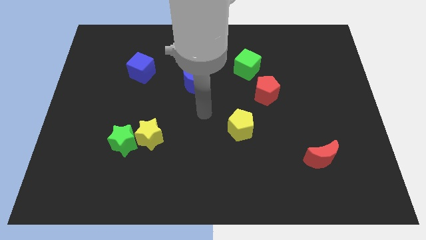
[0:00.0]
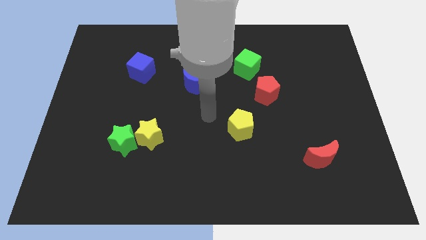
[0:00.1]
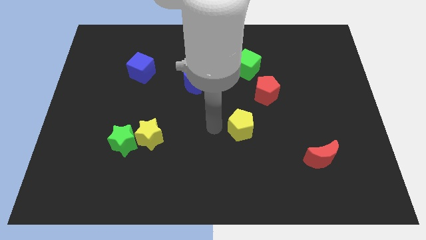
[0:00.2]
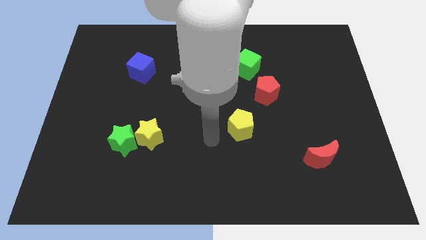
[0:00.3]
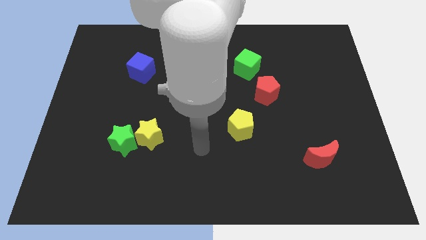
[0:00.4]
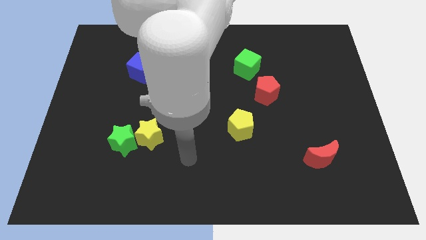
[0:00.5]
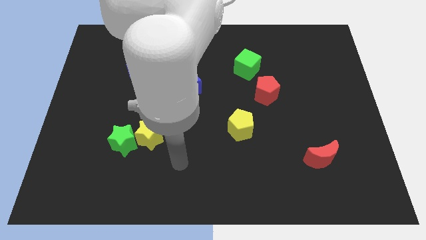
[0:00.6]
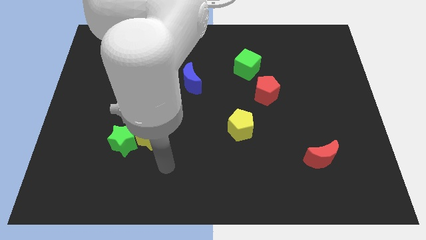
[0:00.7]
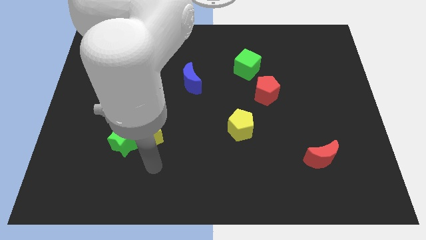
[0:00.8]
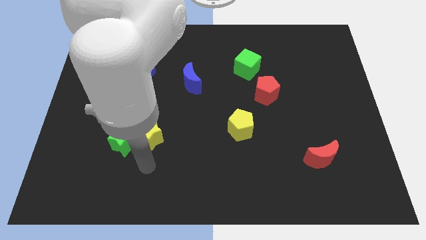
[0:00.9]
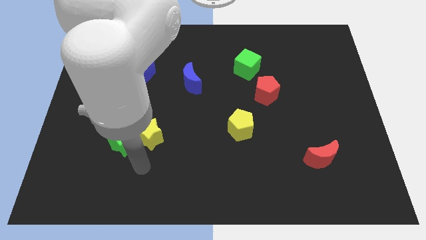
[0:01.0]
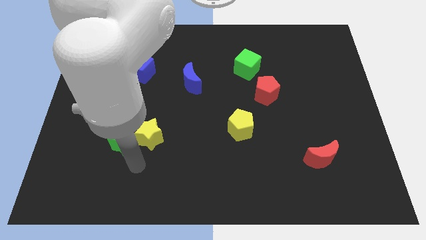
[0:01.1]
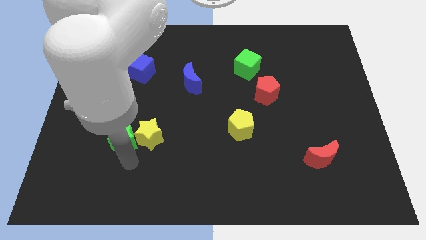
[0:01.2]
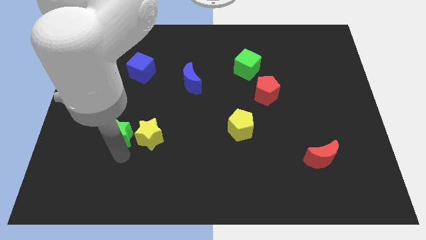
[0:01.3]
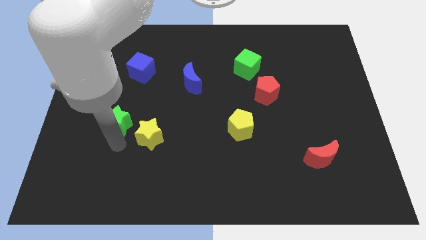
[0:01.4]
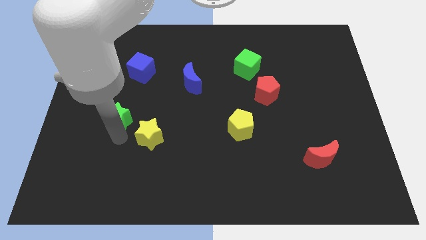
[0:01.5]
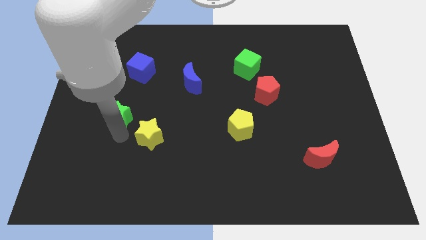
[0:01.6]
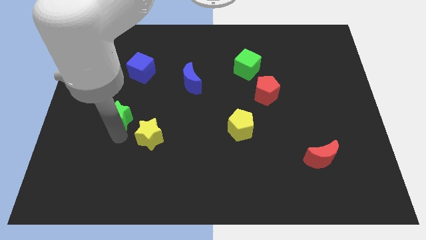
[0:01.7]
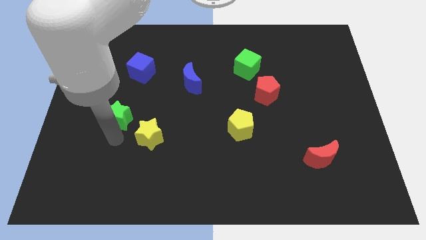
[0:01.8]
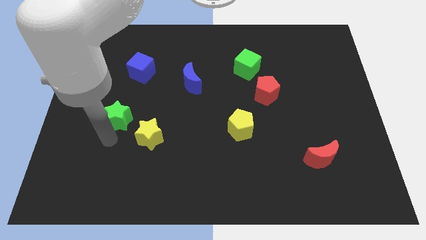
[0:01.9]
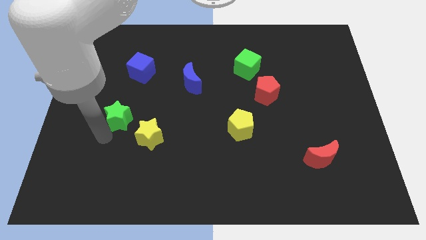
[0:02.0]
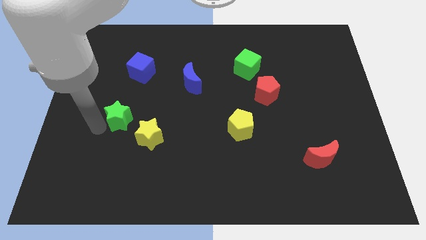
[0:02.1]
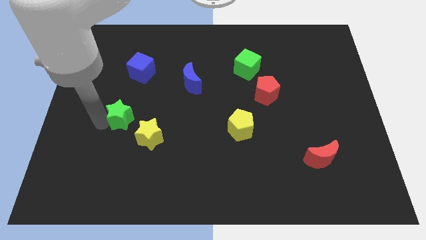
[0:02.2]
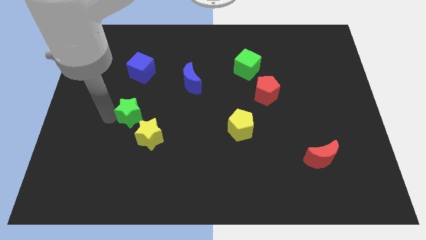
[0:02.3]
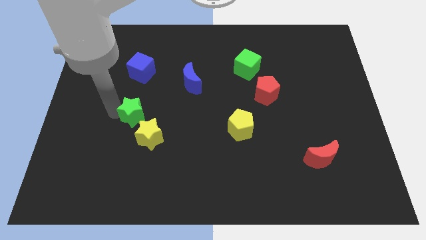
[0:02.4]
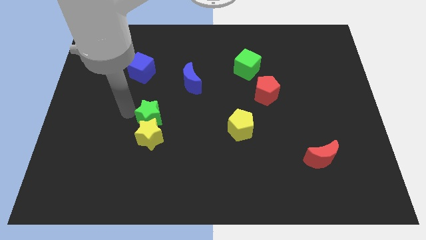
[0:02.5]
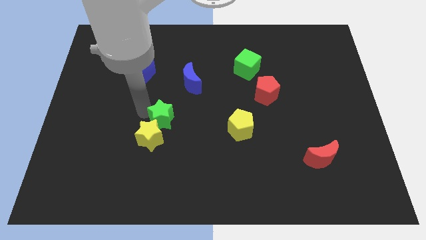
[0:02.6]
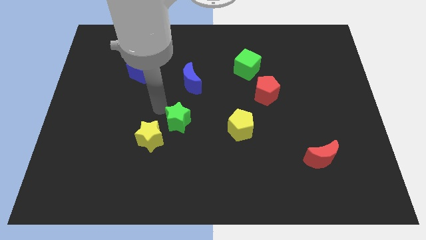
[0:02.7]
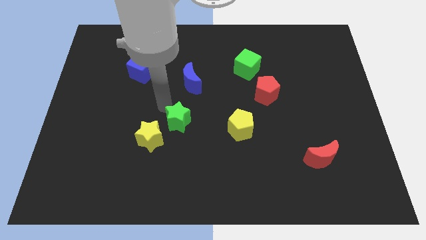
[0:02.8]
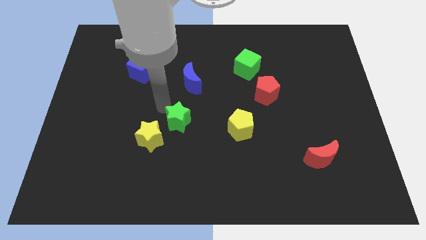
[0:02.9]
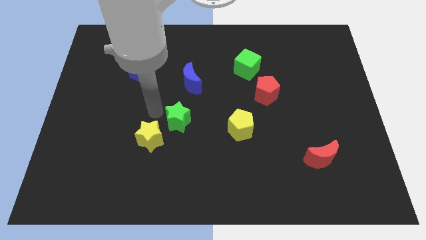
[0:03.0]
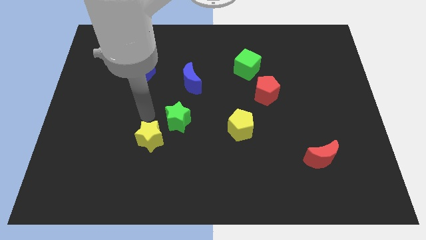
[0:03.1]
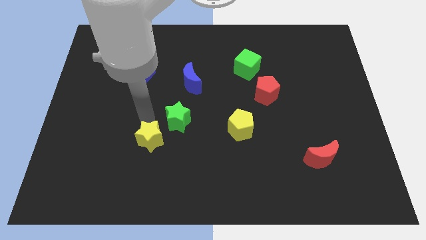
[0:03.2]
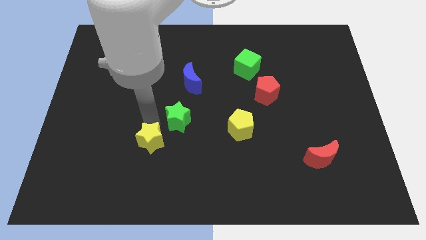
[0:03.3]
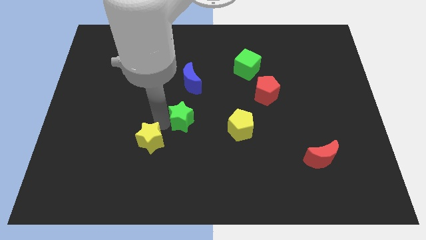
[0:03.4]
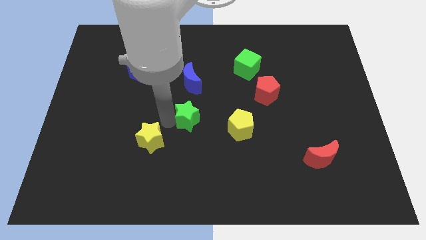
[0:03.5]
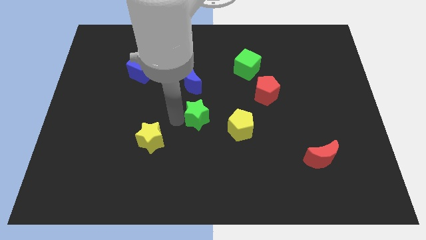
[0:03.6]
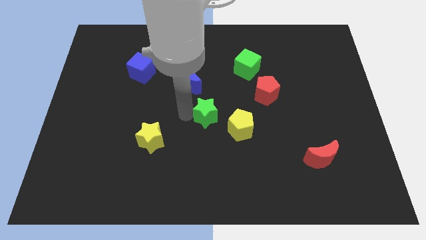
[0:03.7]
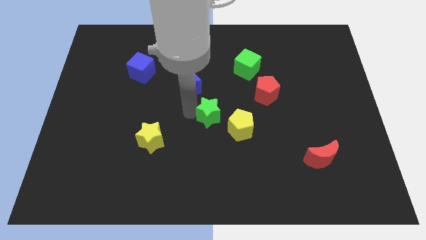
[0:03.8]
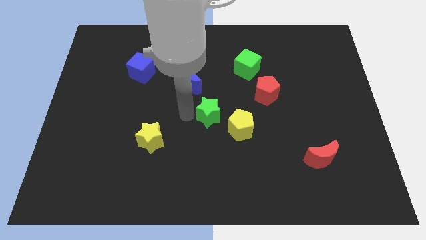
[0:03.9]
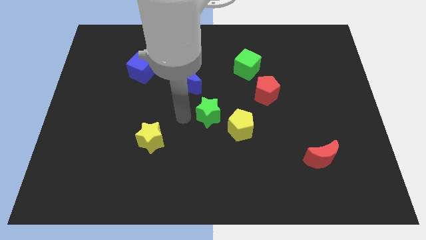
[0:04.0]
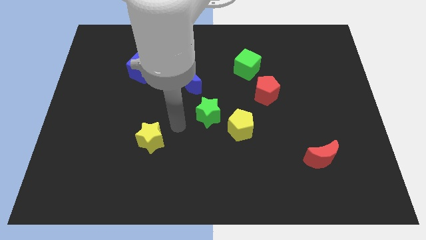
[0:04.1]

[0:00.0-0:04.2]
move the green star to the center of the board

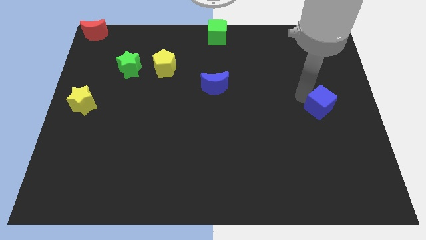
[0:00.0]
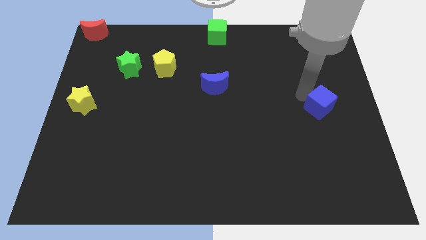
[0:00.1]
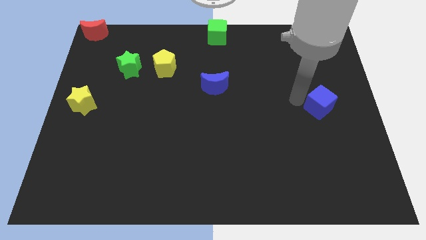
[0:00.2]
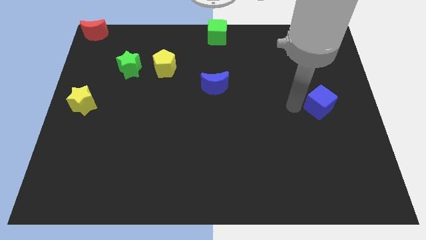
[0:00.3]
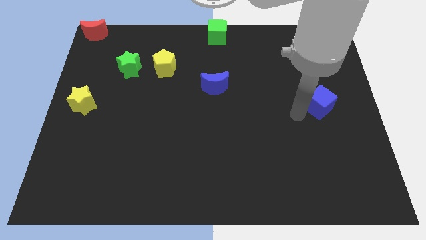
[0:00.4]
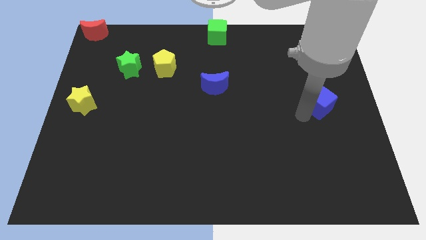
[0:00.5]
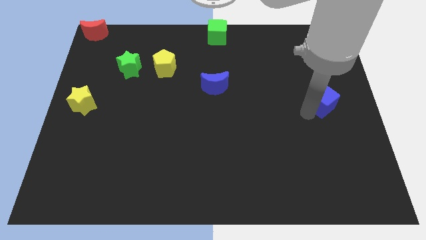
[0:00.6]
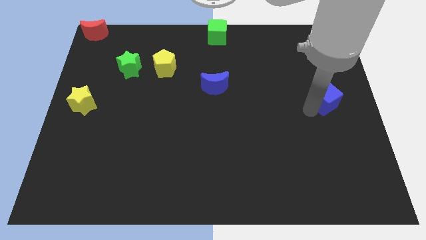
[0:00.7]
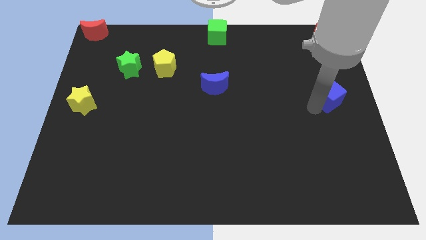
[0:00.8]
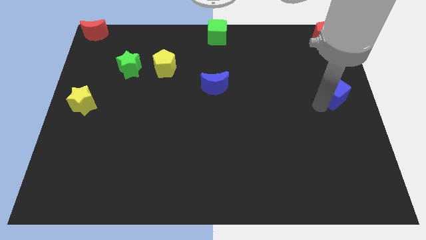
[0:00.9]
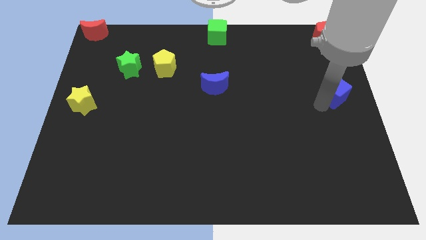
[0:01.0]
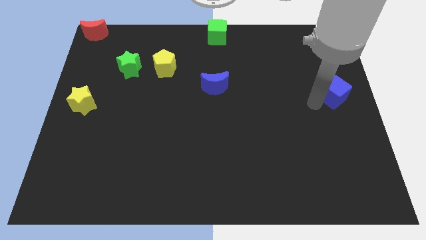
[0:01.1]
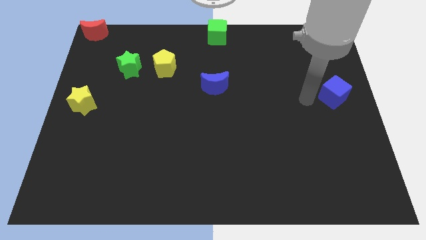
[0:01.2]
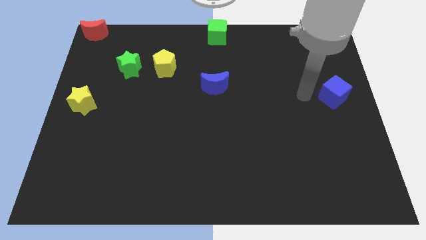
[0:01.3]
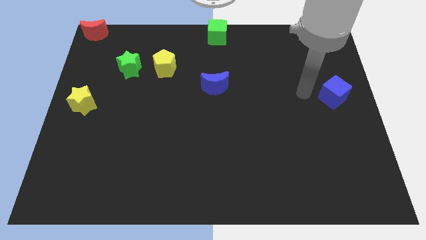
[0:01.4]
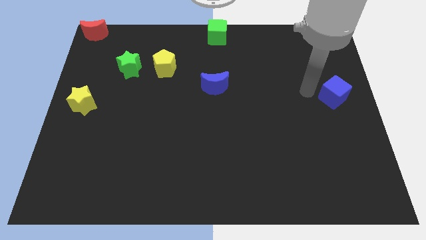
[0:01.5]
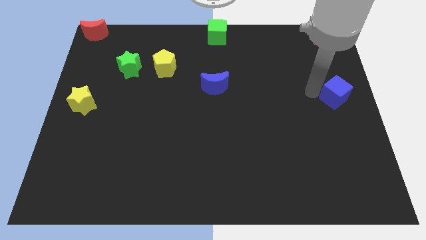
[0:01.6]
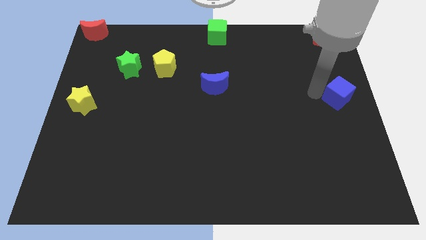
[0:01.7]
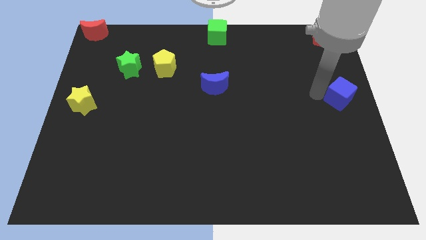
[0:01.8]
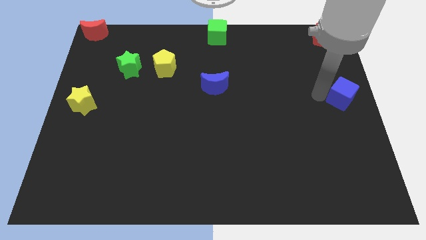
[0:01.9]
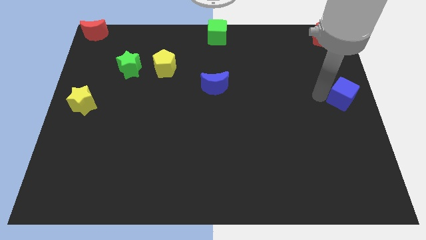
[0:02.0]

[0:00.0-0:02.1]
place blue cube towards the right middle end

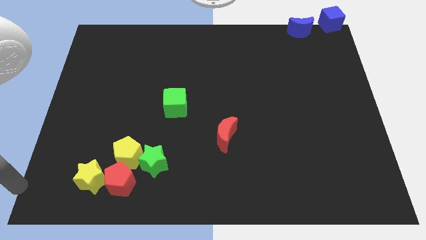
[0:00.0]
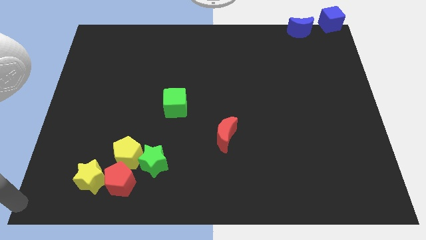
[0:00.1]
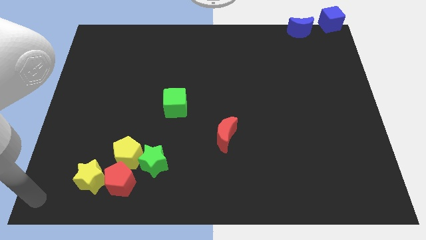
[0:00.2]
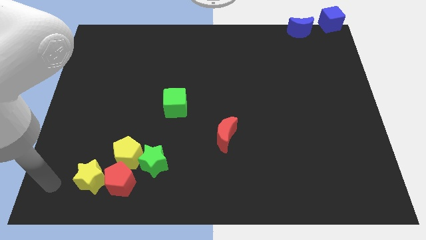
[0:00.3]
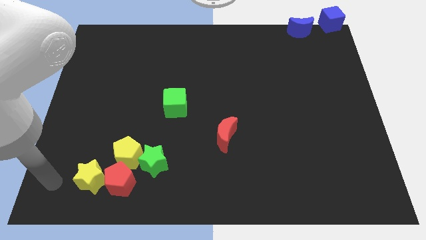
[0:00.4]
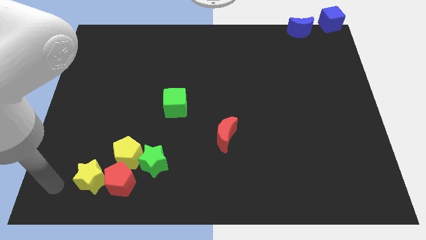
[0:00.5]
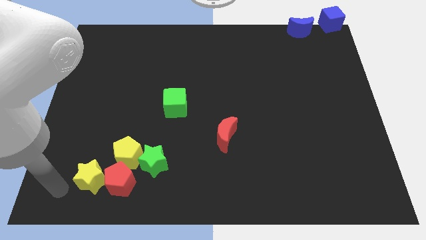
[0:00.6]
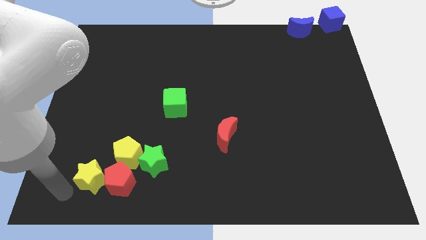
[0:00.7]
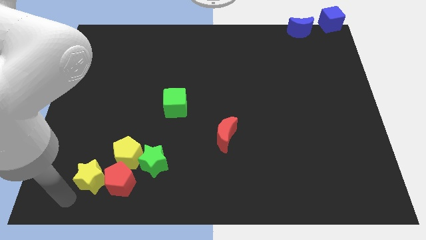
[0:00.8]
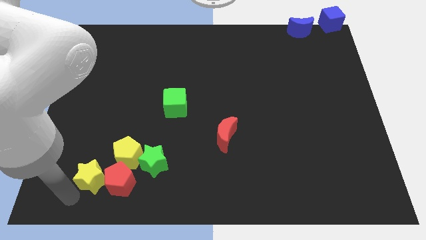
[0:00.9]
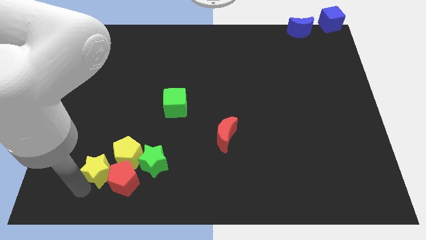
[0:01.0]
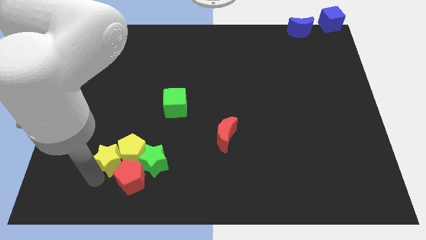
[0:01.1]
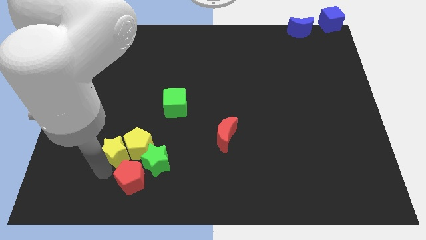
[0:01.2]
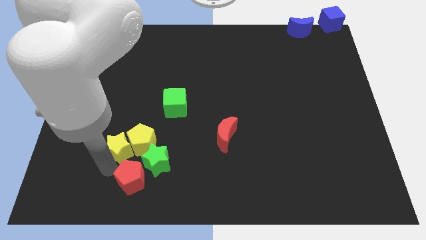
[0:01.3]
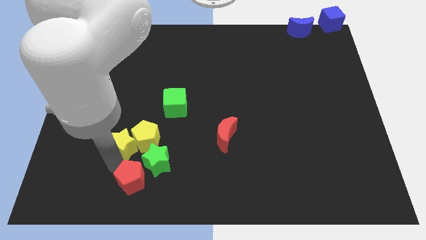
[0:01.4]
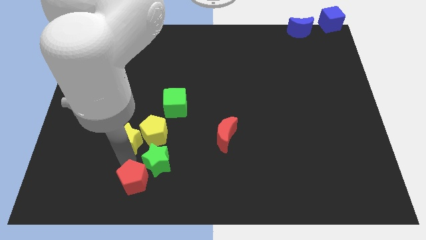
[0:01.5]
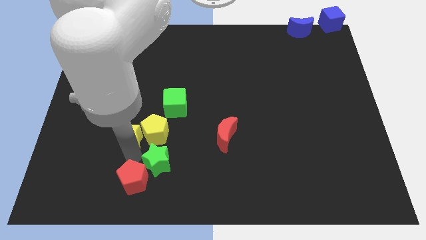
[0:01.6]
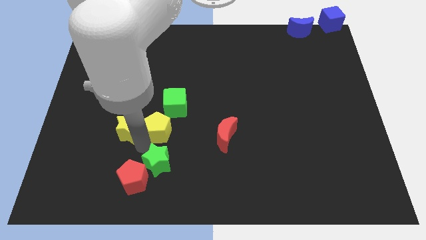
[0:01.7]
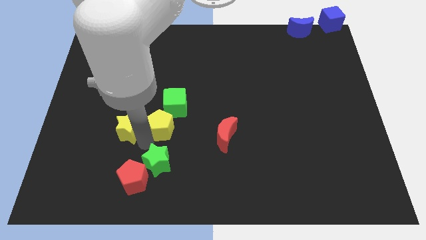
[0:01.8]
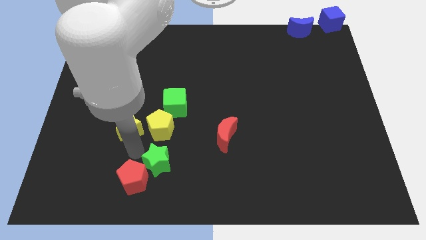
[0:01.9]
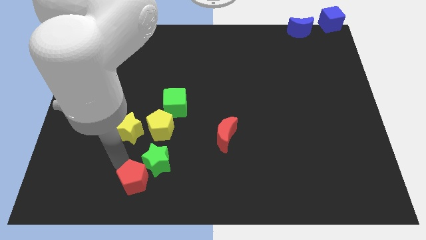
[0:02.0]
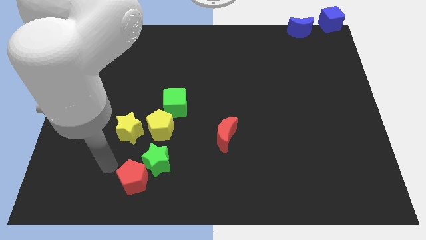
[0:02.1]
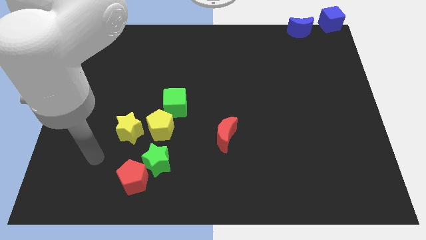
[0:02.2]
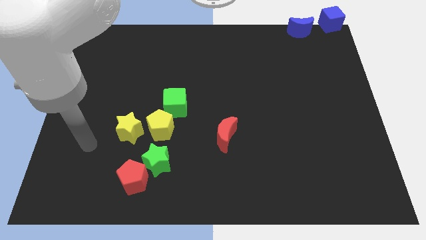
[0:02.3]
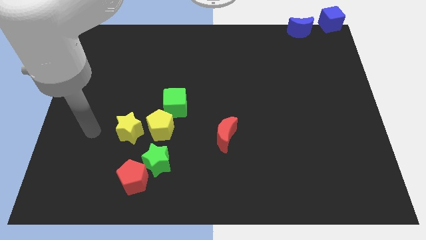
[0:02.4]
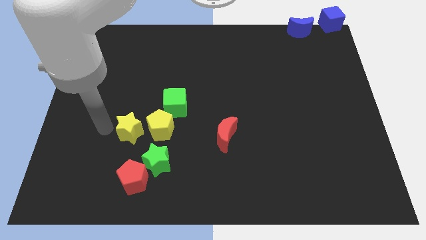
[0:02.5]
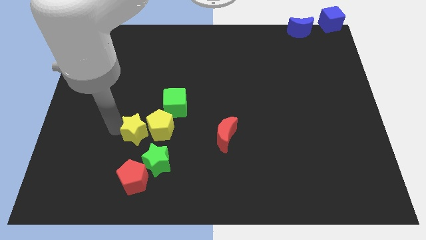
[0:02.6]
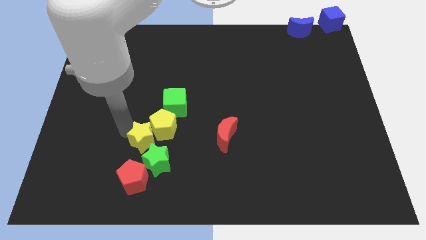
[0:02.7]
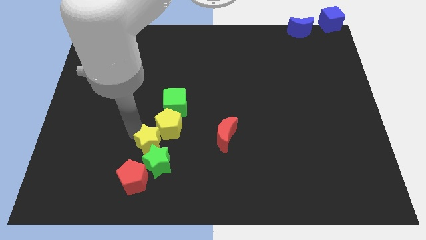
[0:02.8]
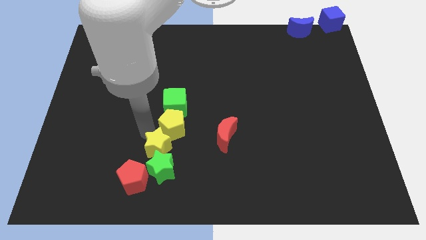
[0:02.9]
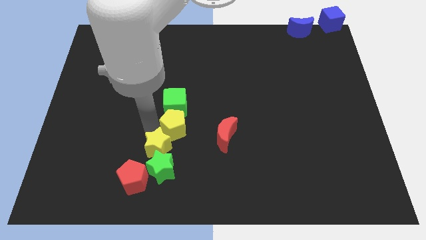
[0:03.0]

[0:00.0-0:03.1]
push the yellow star into the yellow pentagon
